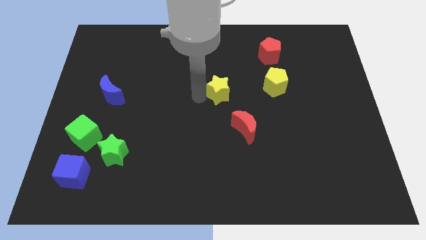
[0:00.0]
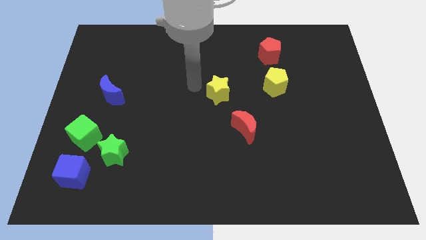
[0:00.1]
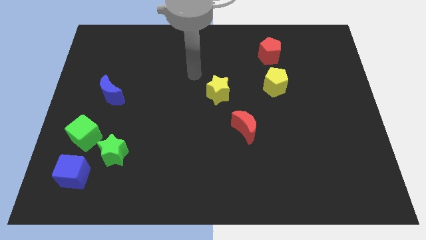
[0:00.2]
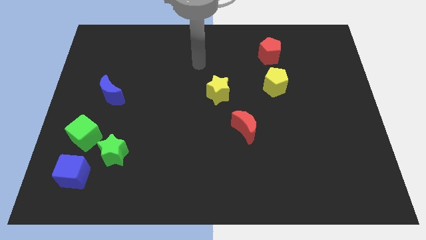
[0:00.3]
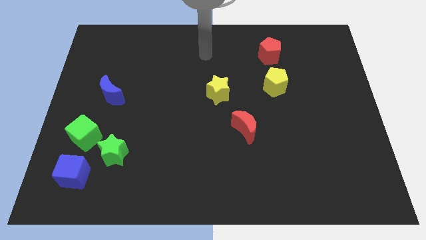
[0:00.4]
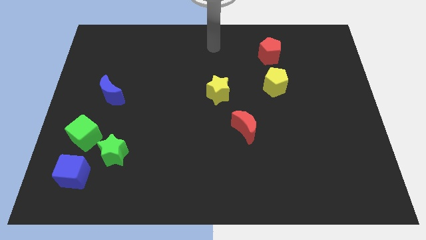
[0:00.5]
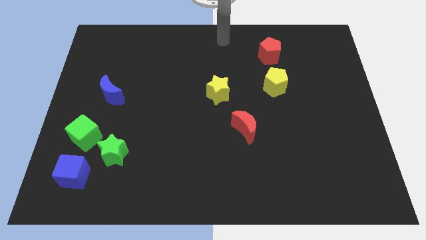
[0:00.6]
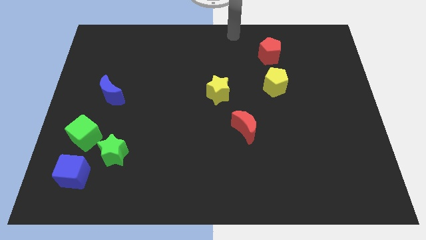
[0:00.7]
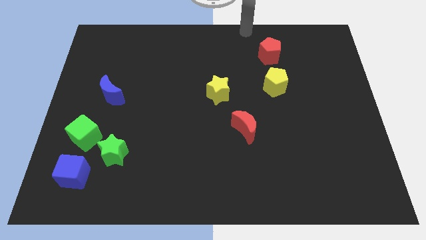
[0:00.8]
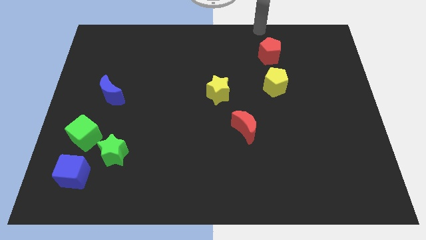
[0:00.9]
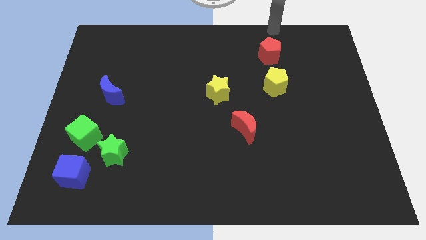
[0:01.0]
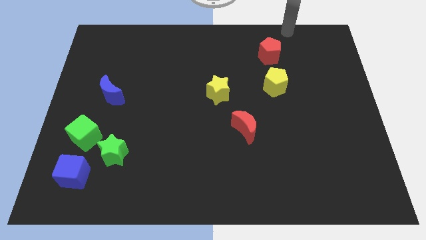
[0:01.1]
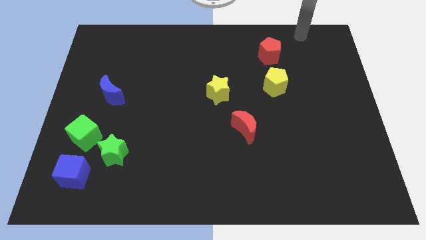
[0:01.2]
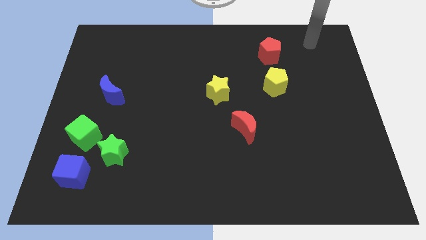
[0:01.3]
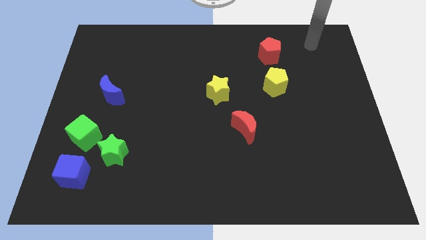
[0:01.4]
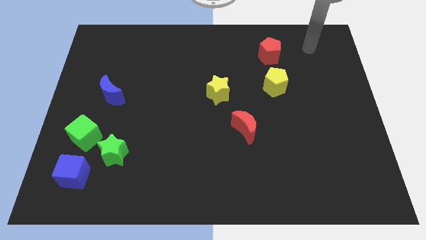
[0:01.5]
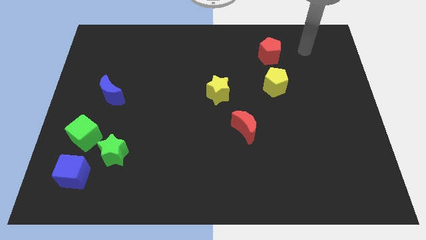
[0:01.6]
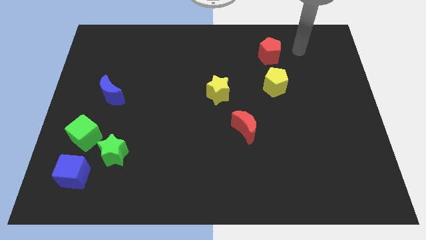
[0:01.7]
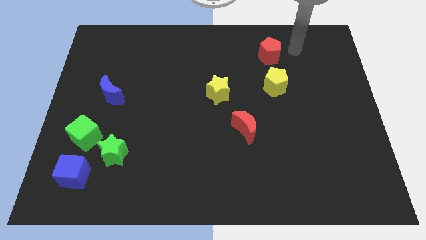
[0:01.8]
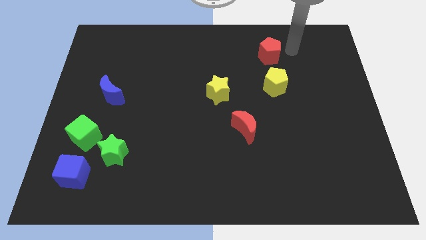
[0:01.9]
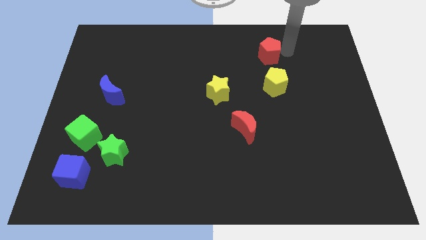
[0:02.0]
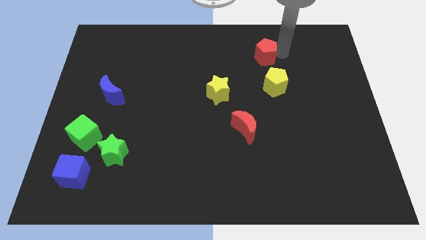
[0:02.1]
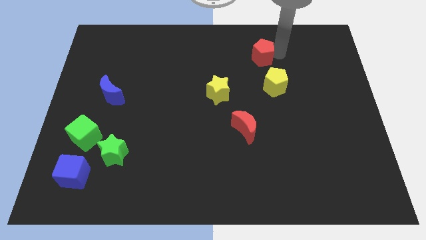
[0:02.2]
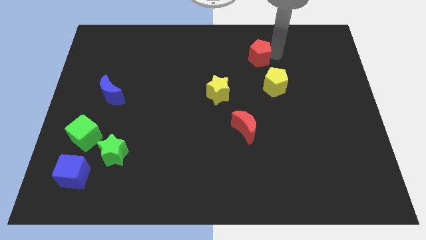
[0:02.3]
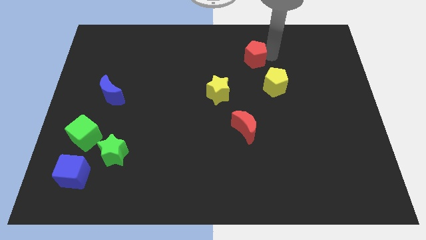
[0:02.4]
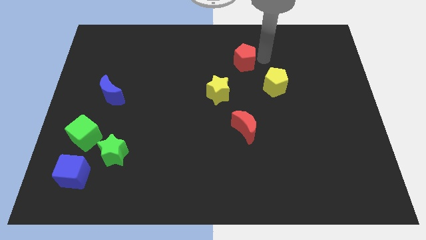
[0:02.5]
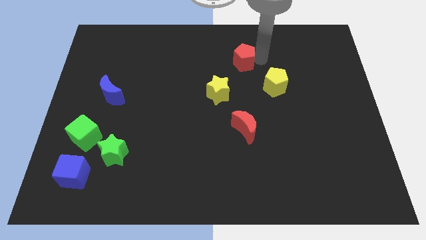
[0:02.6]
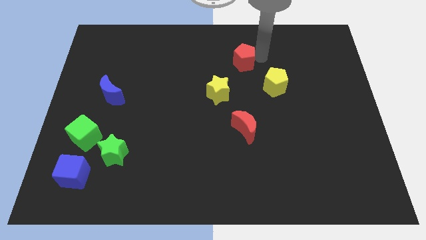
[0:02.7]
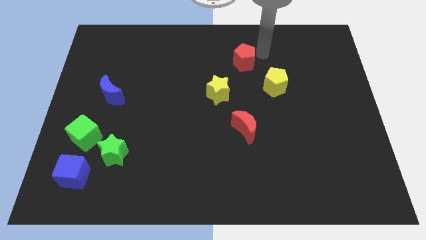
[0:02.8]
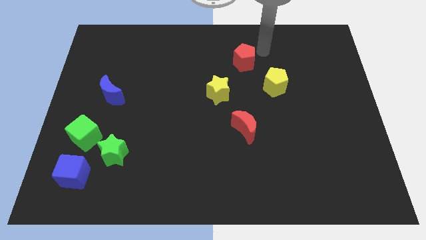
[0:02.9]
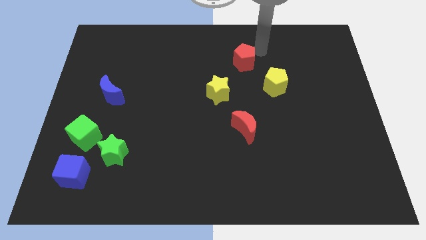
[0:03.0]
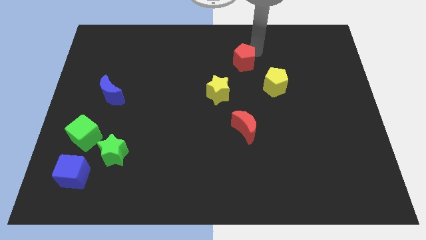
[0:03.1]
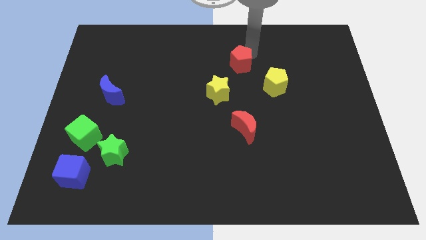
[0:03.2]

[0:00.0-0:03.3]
push red pentagon above yellow star and yellow pentagon

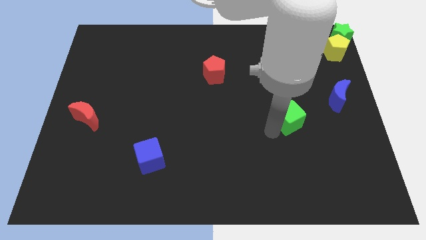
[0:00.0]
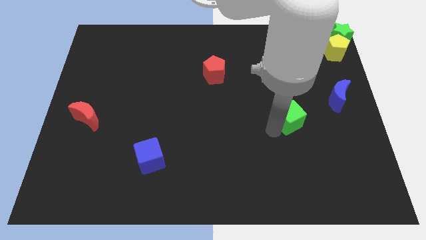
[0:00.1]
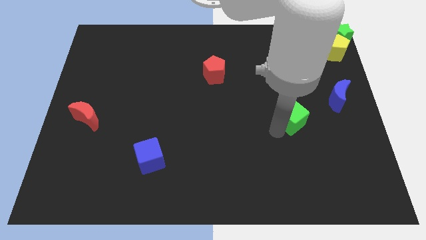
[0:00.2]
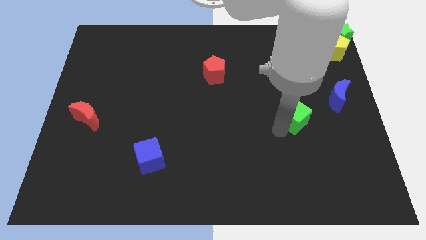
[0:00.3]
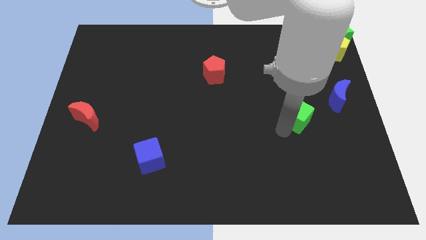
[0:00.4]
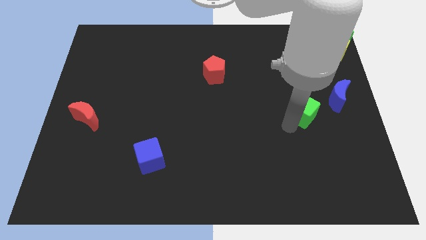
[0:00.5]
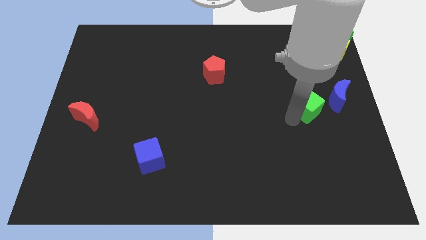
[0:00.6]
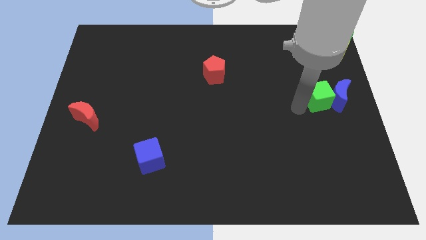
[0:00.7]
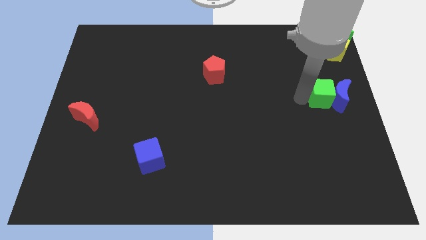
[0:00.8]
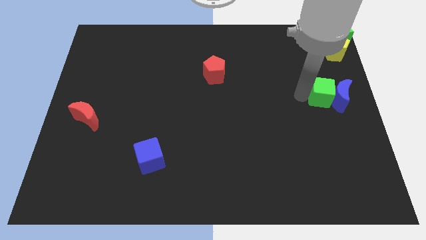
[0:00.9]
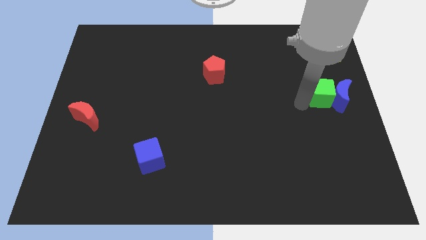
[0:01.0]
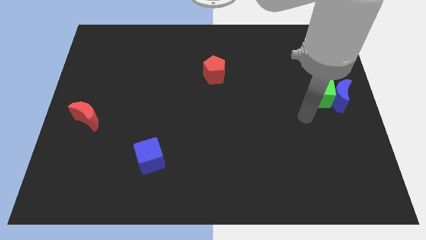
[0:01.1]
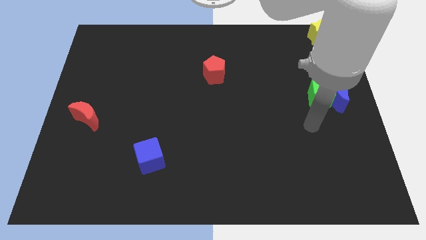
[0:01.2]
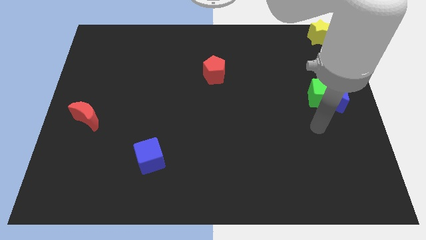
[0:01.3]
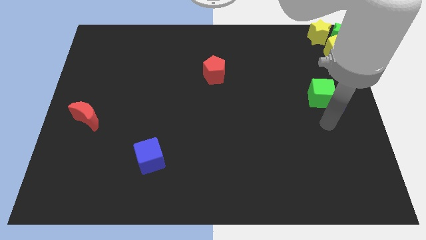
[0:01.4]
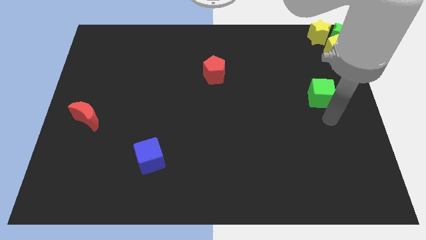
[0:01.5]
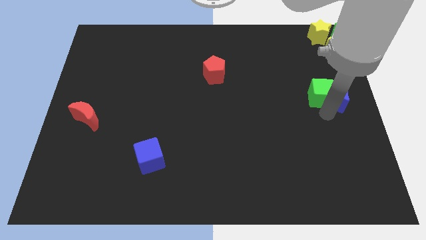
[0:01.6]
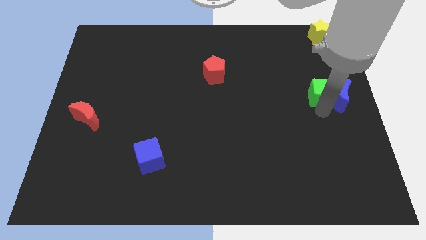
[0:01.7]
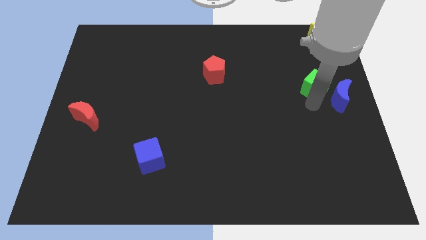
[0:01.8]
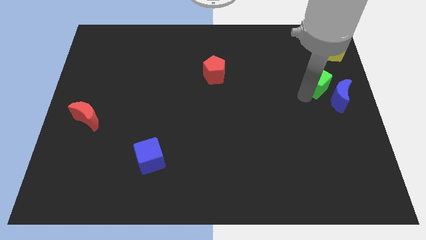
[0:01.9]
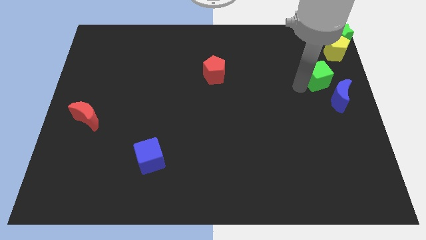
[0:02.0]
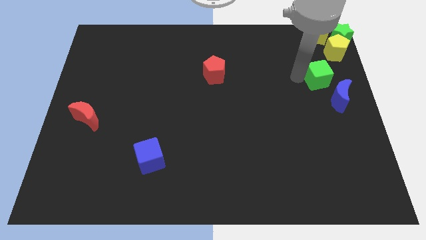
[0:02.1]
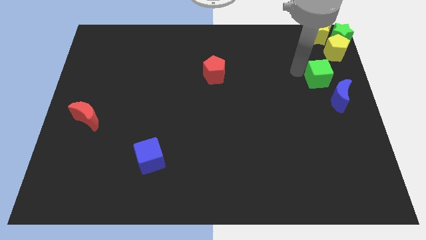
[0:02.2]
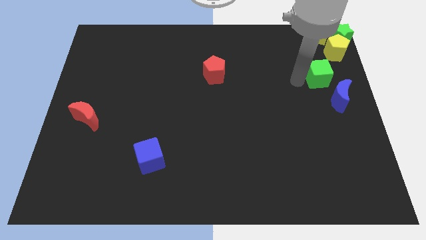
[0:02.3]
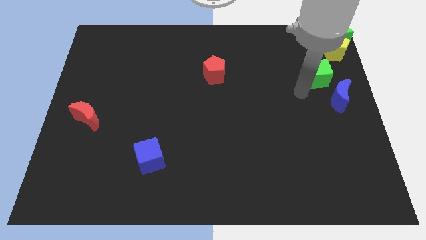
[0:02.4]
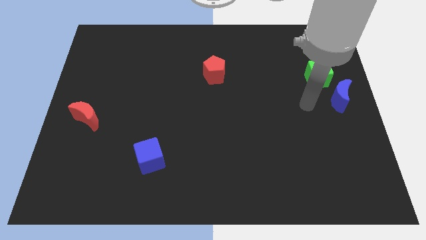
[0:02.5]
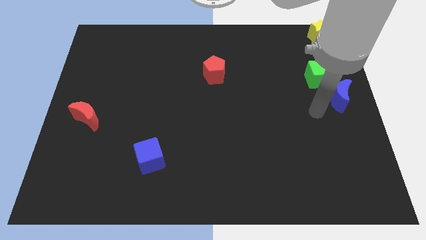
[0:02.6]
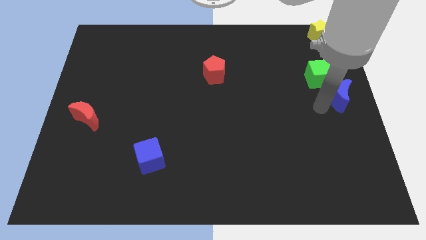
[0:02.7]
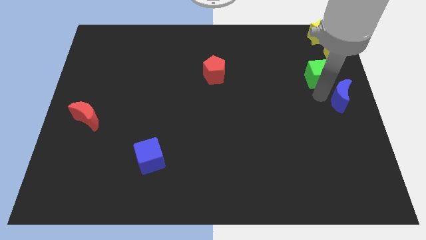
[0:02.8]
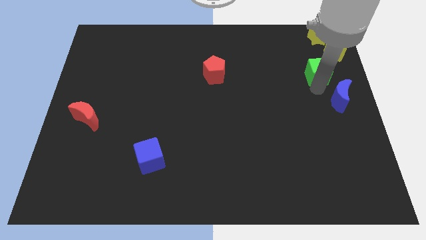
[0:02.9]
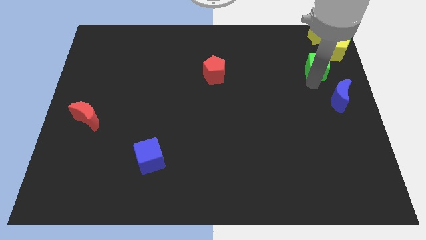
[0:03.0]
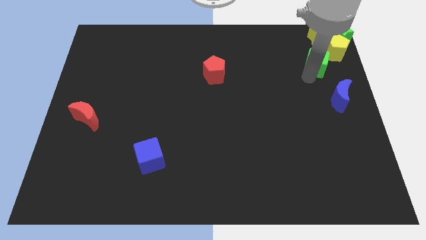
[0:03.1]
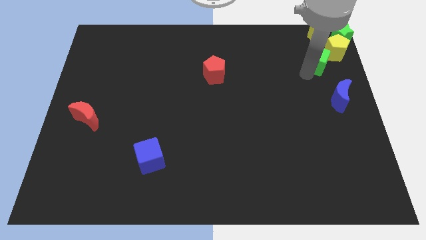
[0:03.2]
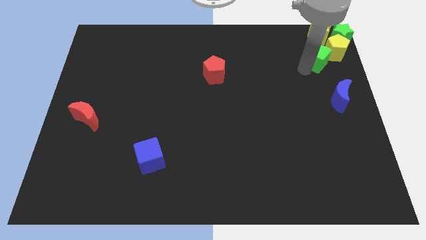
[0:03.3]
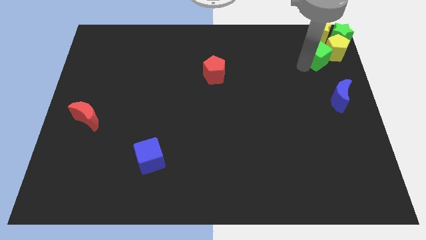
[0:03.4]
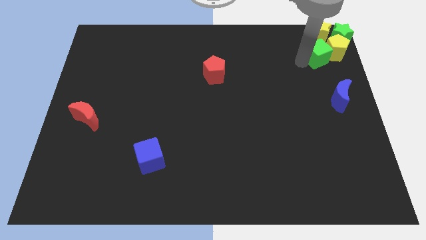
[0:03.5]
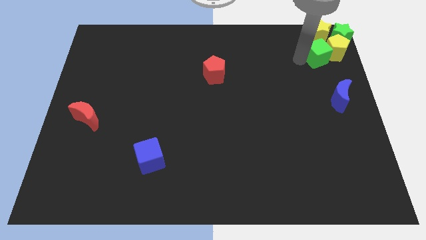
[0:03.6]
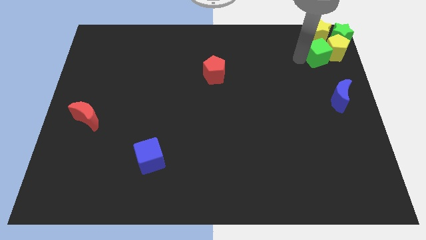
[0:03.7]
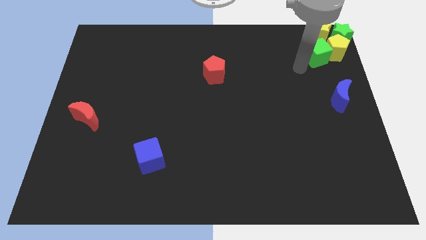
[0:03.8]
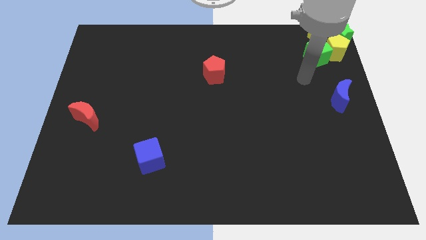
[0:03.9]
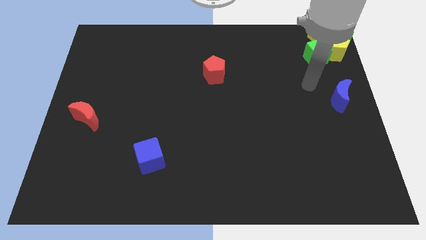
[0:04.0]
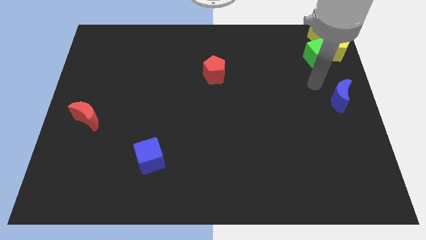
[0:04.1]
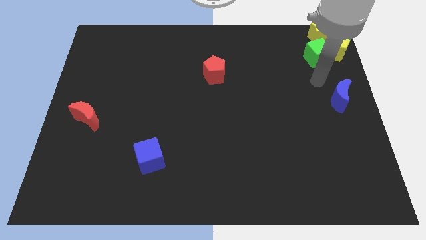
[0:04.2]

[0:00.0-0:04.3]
move the green cube to the group of blocks at the top right corner

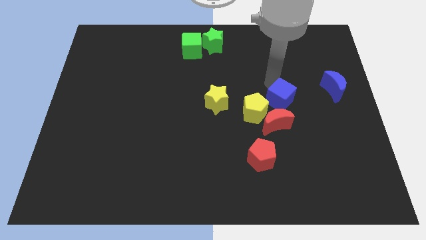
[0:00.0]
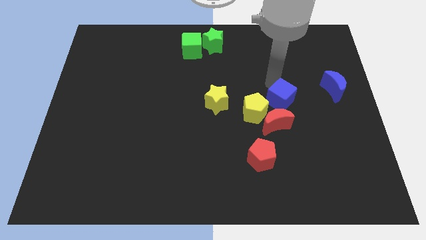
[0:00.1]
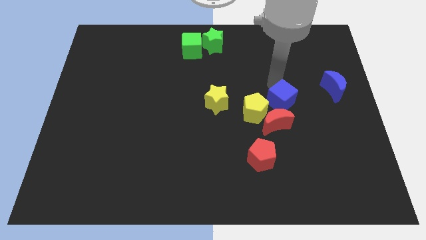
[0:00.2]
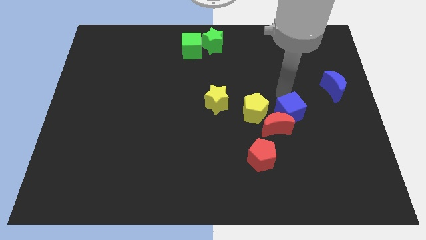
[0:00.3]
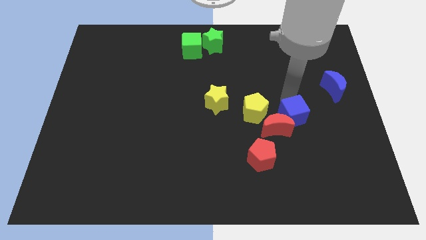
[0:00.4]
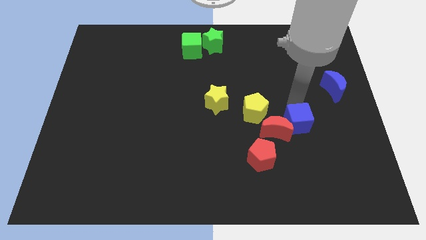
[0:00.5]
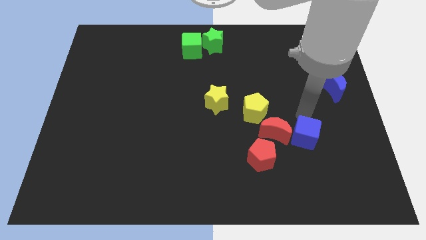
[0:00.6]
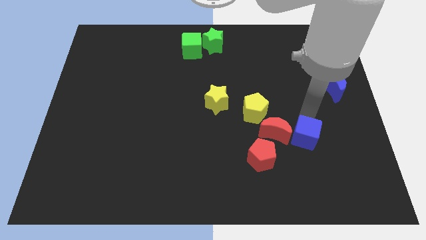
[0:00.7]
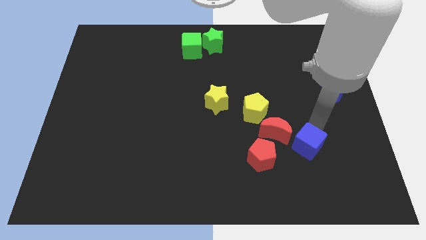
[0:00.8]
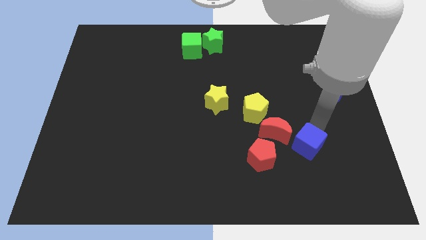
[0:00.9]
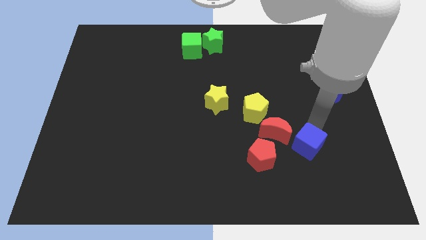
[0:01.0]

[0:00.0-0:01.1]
slide blue cube to the right of red moon

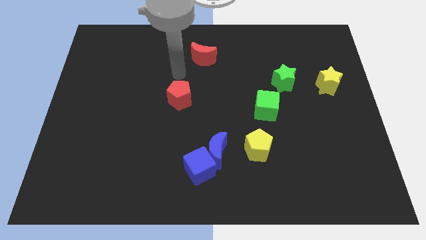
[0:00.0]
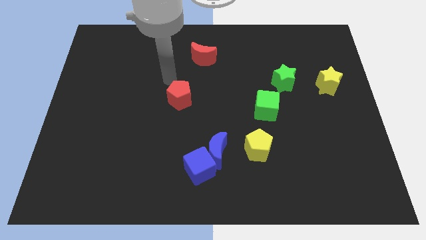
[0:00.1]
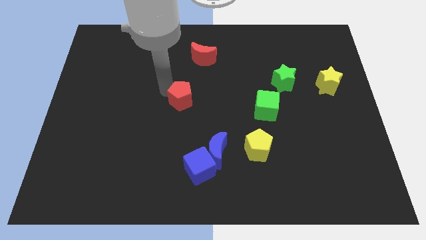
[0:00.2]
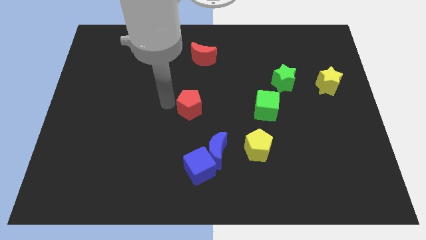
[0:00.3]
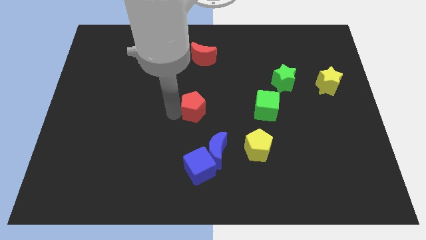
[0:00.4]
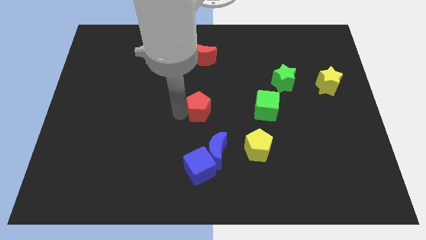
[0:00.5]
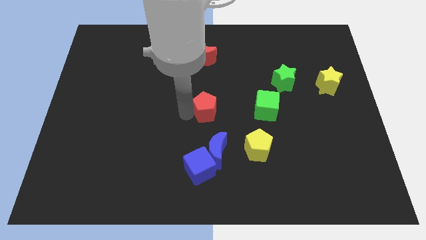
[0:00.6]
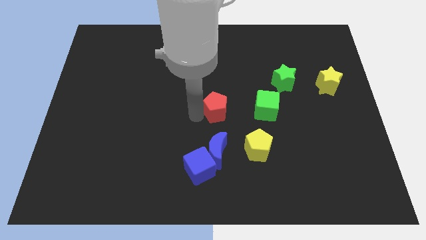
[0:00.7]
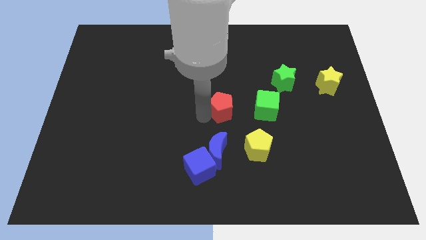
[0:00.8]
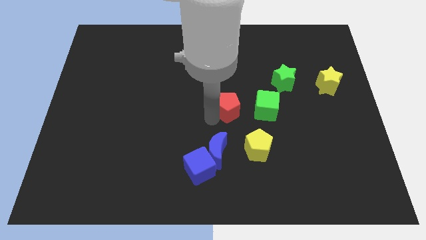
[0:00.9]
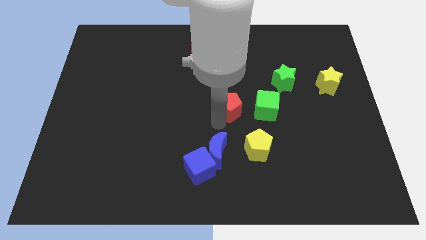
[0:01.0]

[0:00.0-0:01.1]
push the red pentagon to the top of the blue crescent
